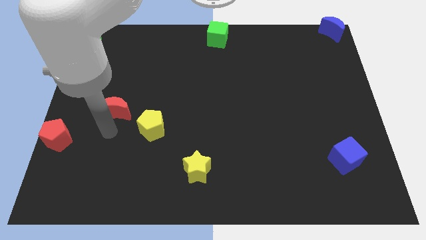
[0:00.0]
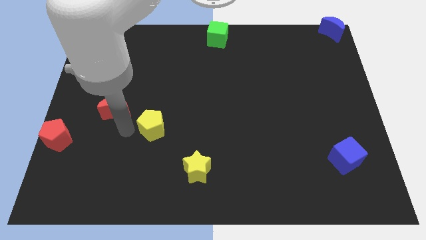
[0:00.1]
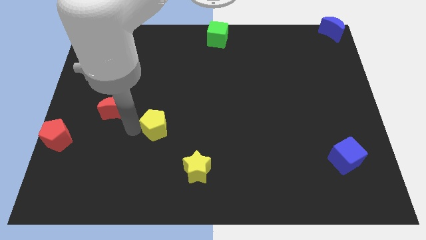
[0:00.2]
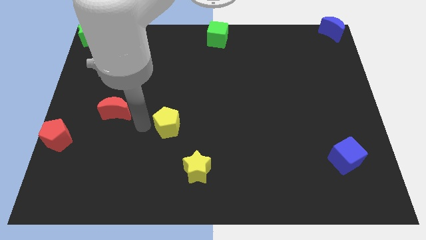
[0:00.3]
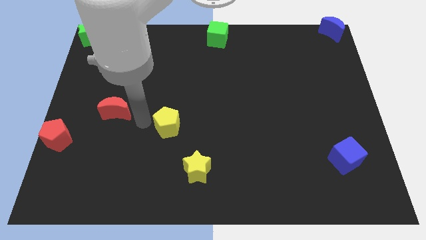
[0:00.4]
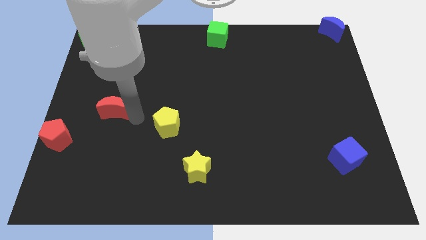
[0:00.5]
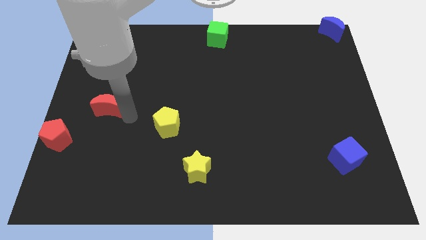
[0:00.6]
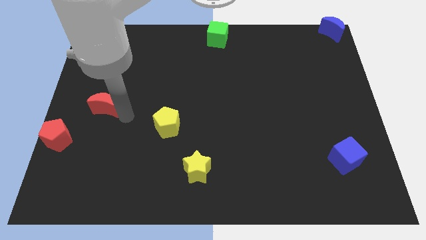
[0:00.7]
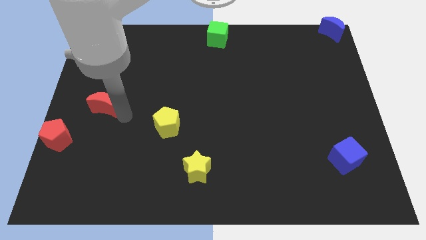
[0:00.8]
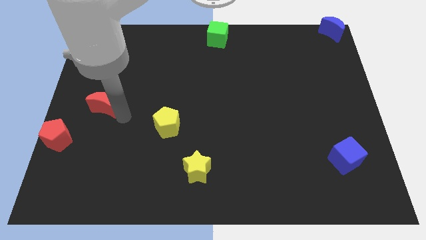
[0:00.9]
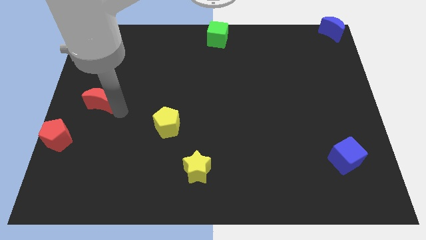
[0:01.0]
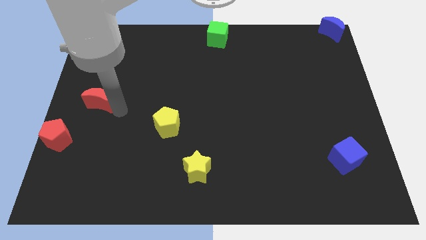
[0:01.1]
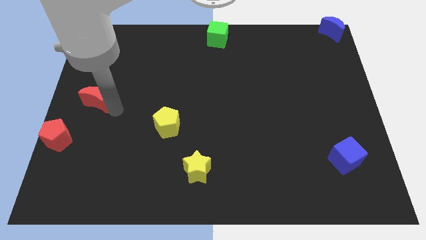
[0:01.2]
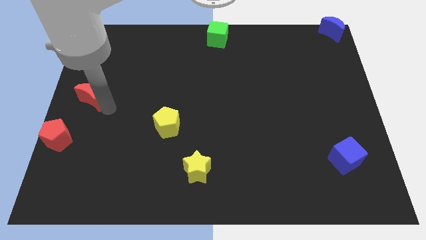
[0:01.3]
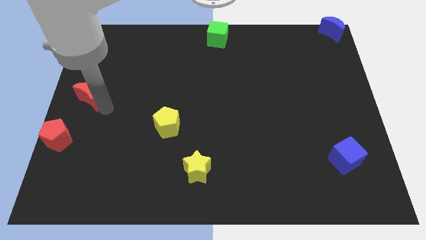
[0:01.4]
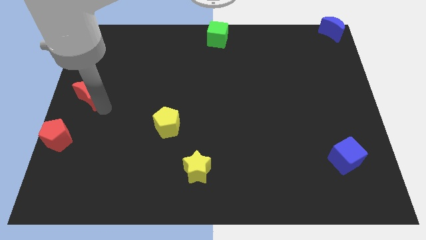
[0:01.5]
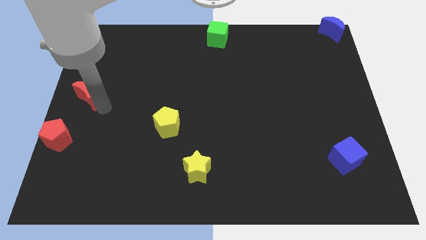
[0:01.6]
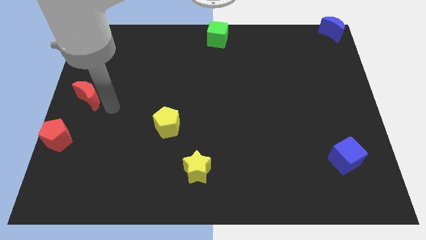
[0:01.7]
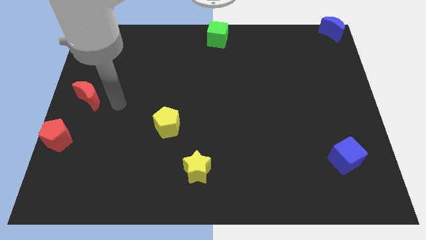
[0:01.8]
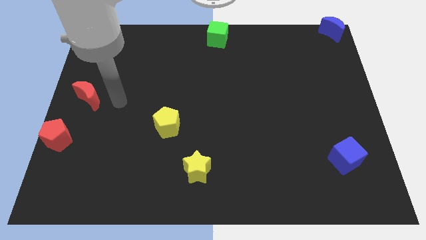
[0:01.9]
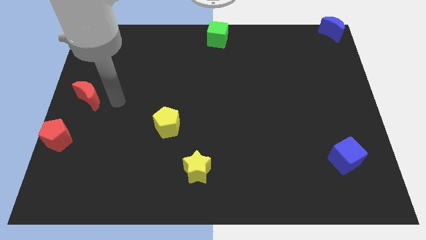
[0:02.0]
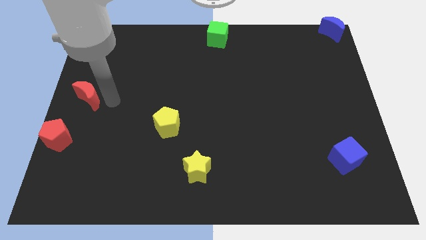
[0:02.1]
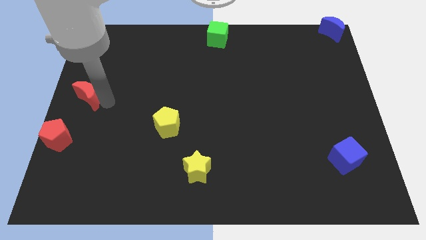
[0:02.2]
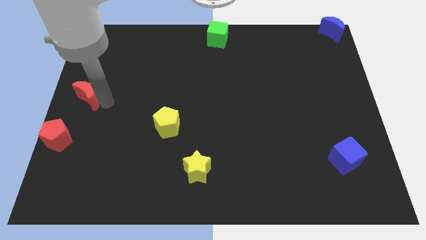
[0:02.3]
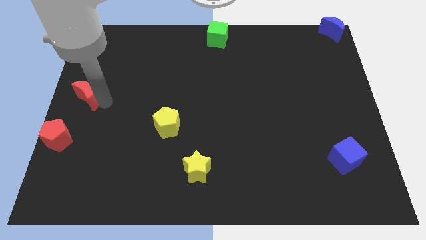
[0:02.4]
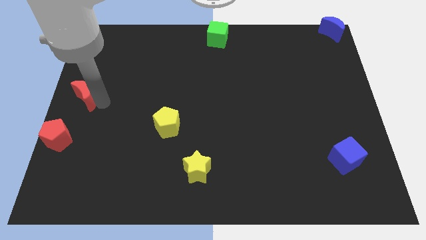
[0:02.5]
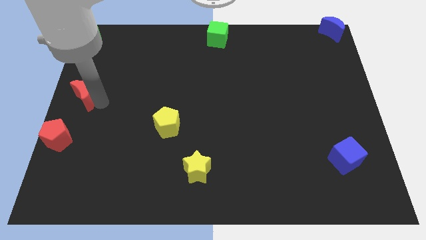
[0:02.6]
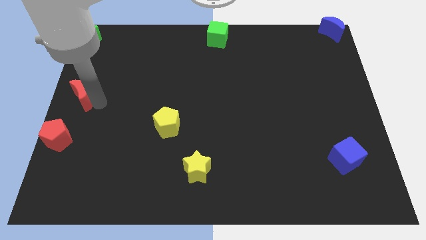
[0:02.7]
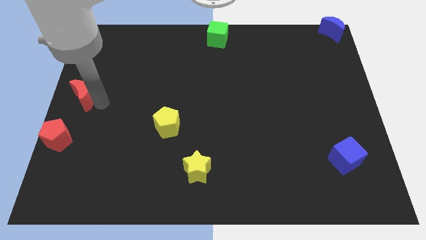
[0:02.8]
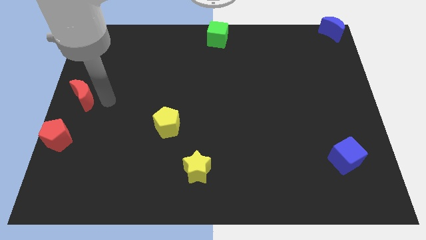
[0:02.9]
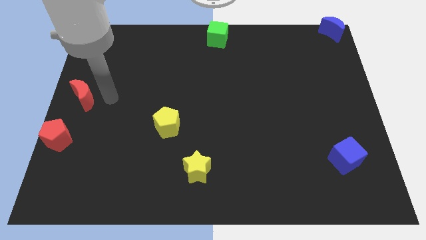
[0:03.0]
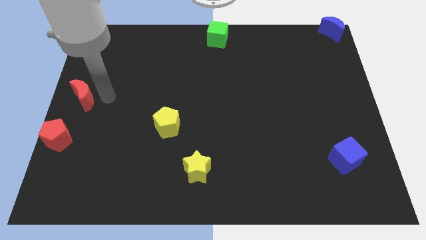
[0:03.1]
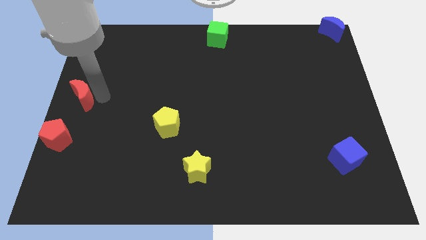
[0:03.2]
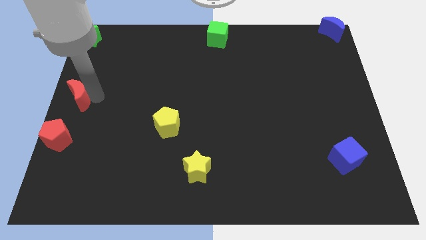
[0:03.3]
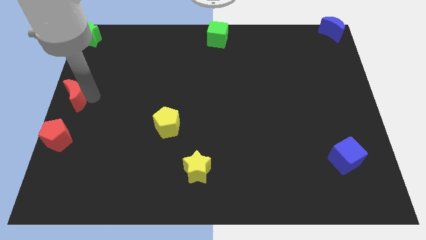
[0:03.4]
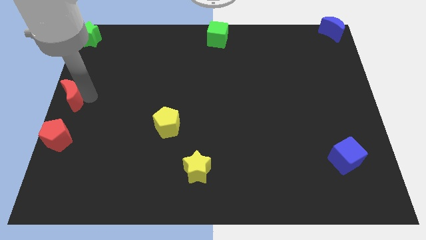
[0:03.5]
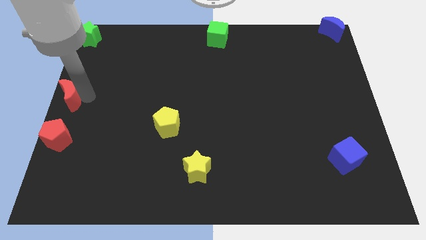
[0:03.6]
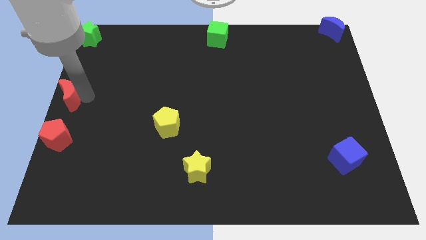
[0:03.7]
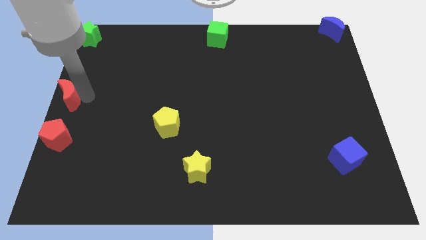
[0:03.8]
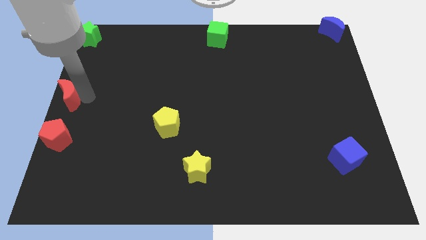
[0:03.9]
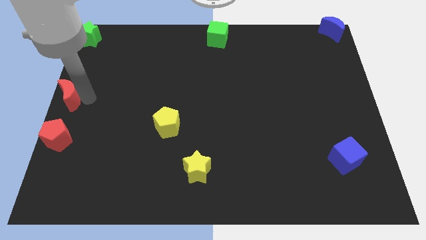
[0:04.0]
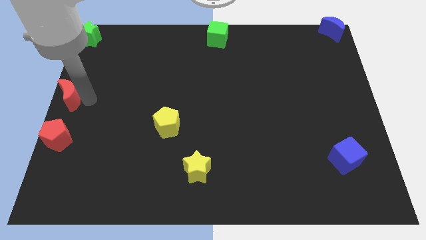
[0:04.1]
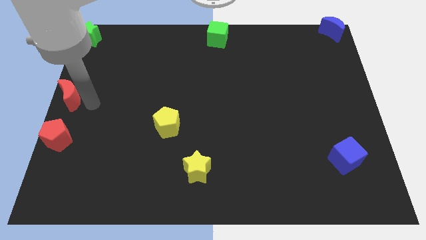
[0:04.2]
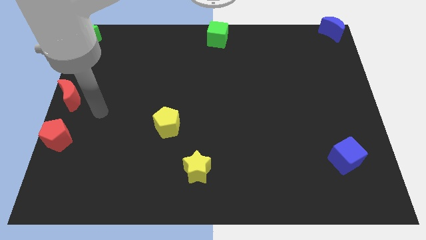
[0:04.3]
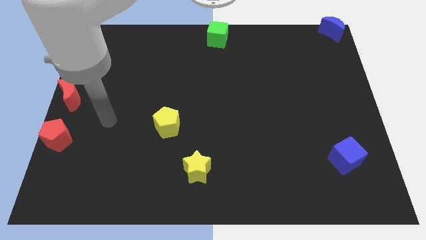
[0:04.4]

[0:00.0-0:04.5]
separate the red moon from the yellow pentagon

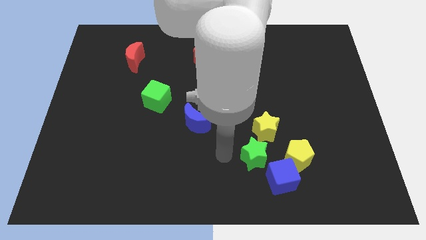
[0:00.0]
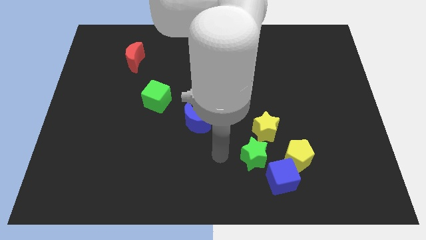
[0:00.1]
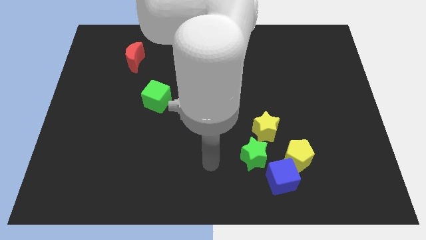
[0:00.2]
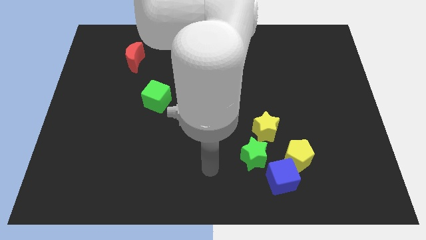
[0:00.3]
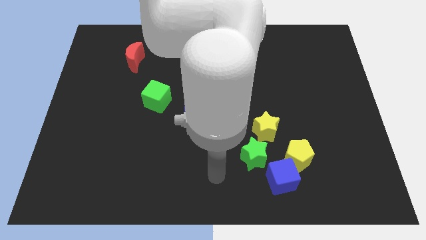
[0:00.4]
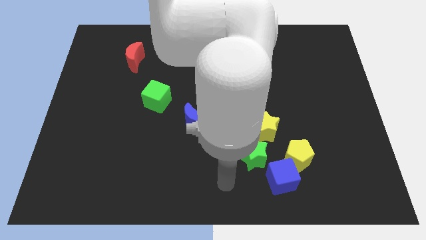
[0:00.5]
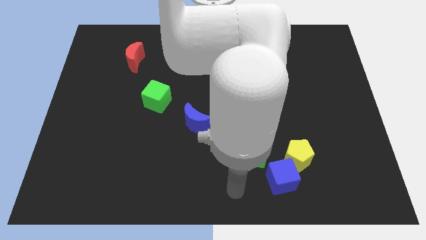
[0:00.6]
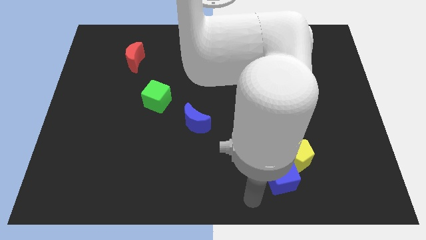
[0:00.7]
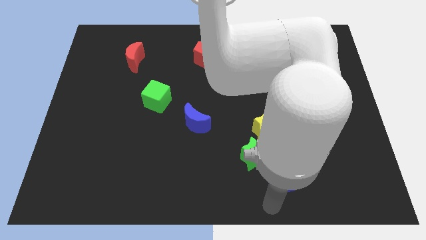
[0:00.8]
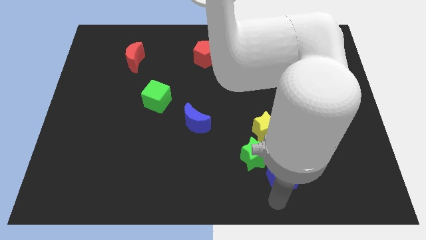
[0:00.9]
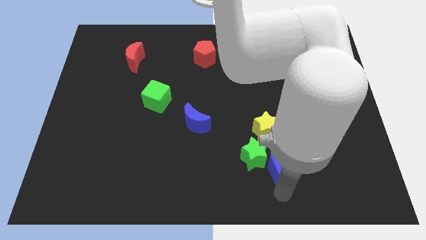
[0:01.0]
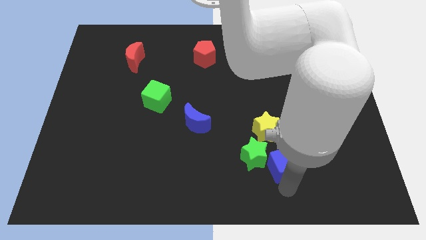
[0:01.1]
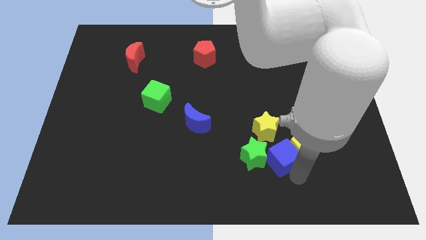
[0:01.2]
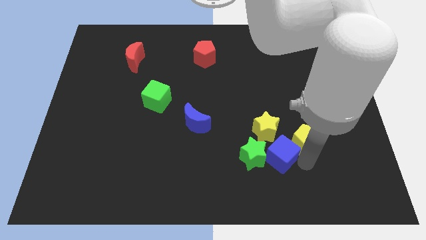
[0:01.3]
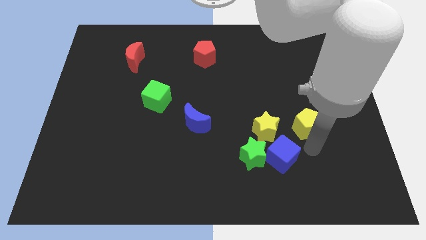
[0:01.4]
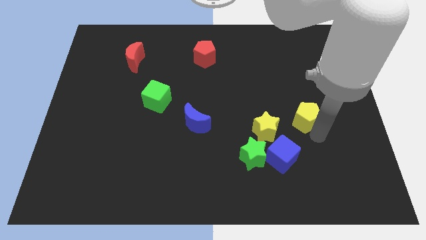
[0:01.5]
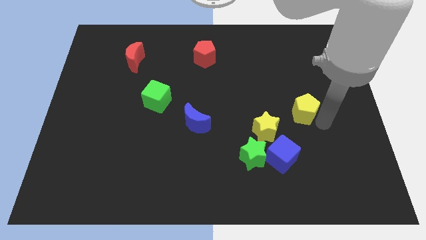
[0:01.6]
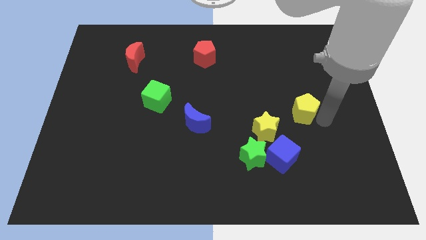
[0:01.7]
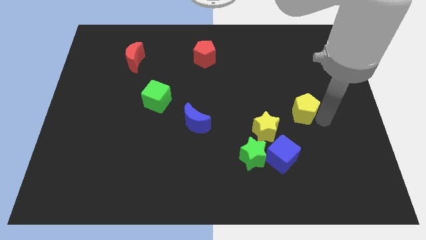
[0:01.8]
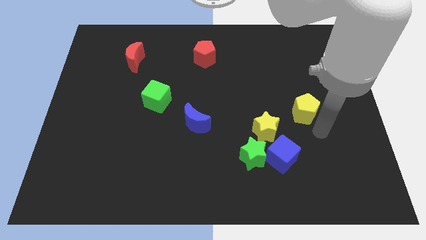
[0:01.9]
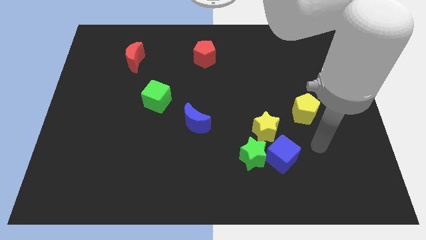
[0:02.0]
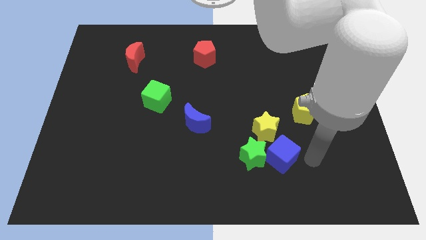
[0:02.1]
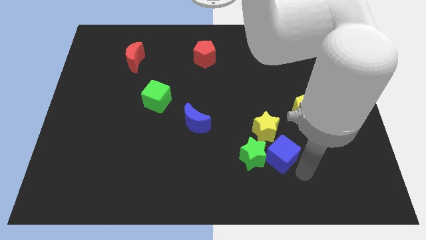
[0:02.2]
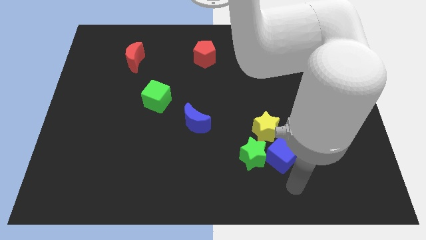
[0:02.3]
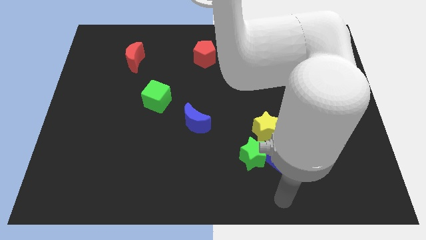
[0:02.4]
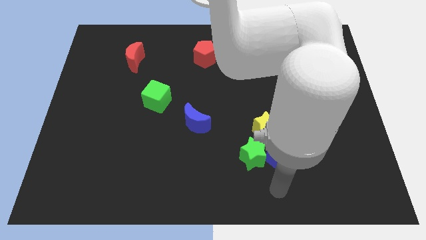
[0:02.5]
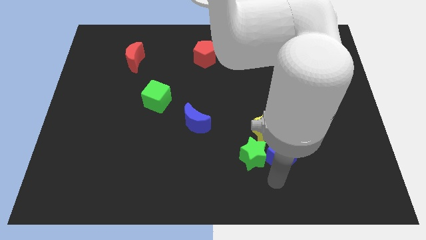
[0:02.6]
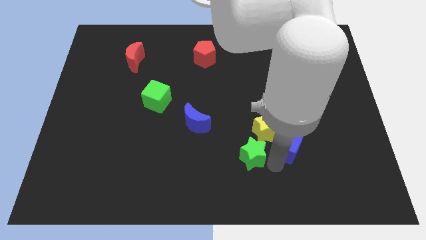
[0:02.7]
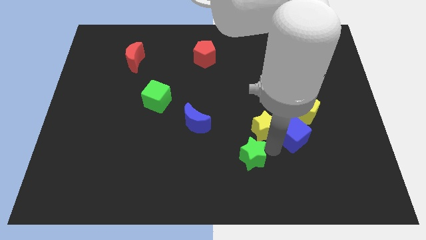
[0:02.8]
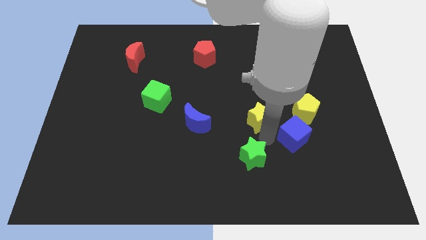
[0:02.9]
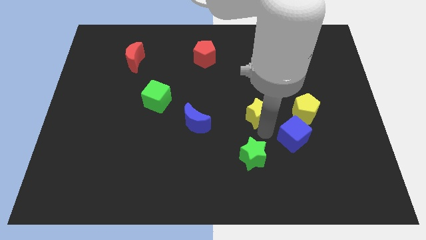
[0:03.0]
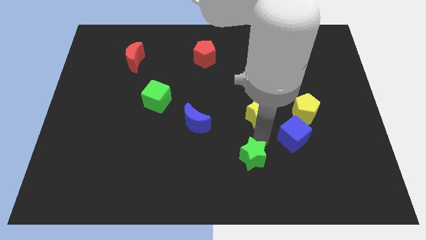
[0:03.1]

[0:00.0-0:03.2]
push the yellow pentagon blue cube yellow star away from the green star

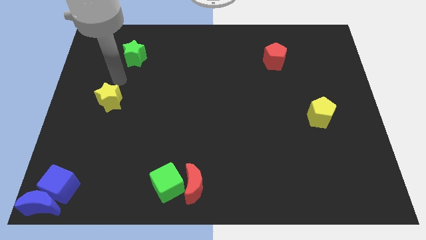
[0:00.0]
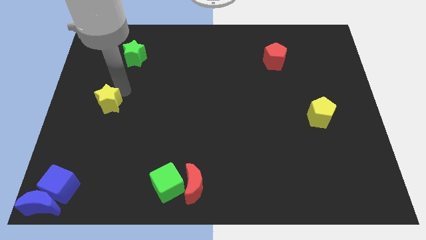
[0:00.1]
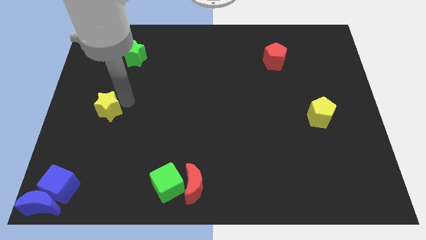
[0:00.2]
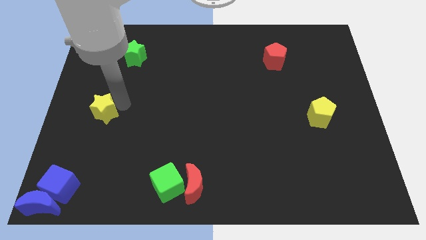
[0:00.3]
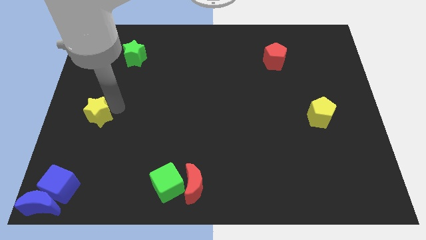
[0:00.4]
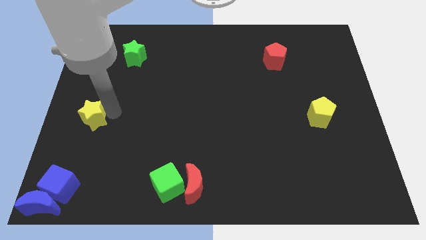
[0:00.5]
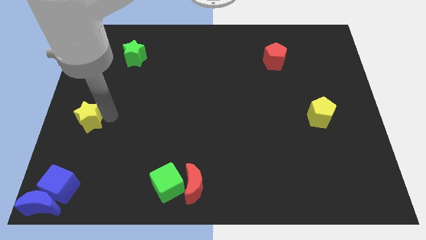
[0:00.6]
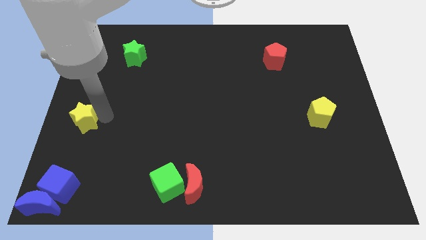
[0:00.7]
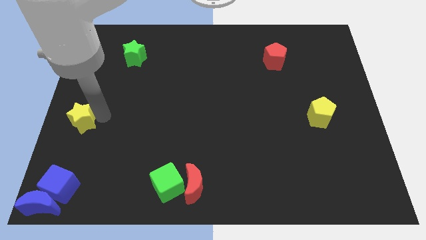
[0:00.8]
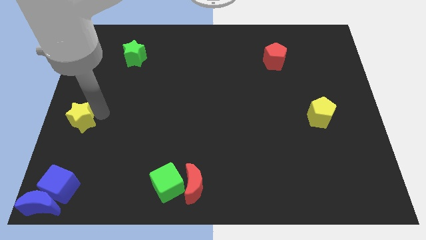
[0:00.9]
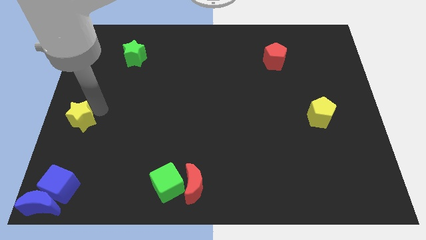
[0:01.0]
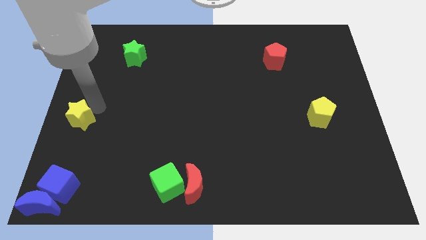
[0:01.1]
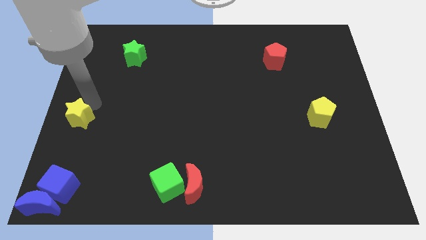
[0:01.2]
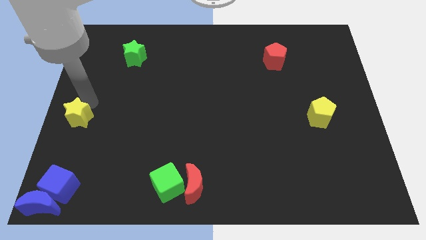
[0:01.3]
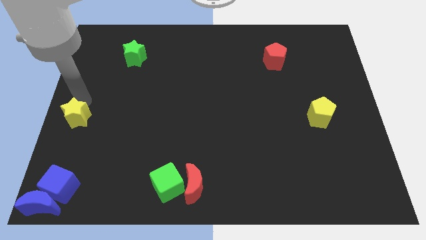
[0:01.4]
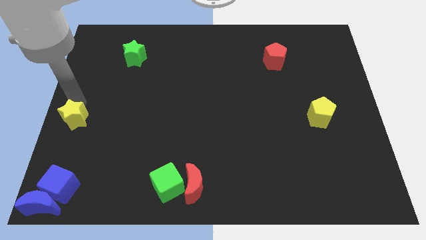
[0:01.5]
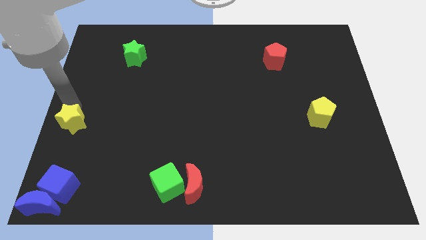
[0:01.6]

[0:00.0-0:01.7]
place the yellow star above the blue cube
